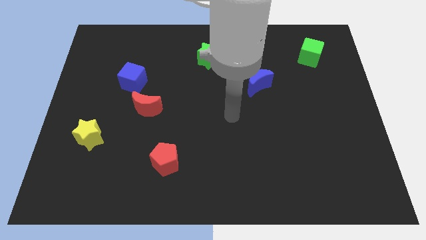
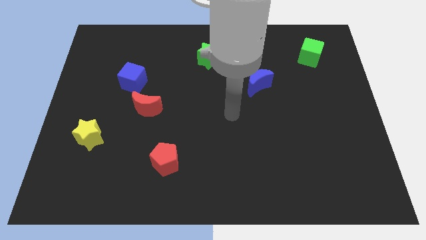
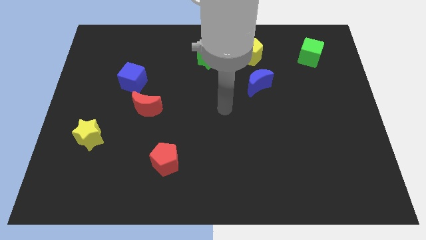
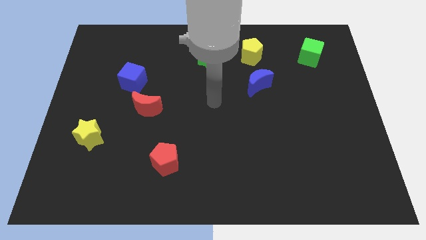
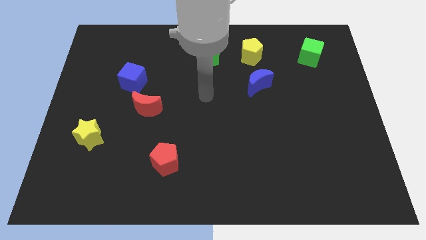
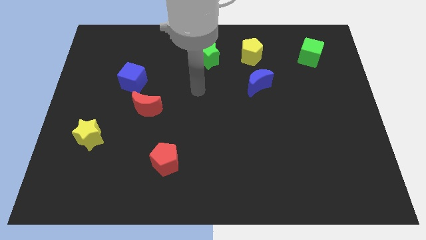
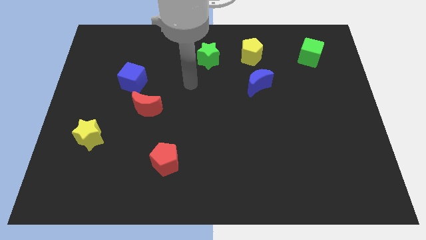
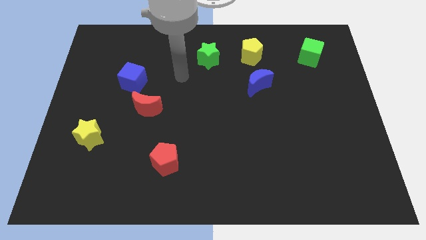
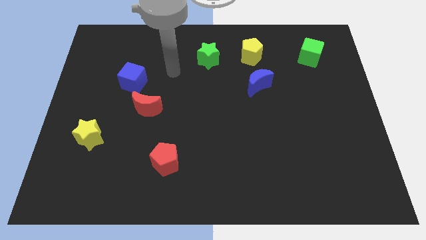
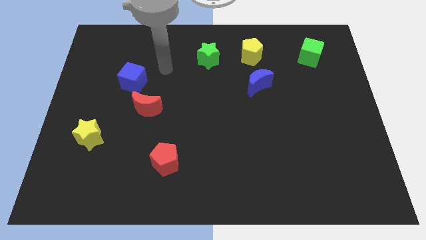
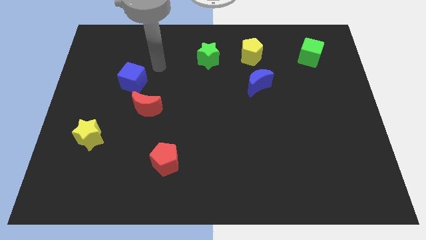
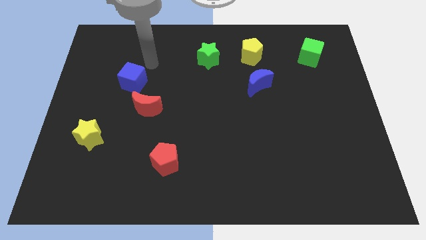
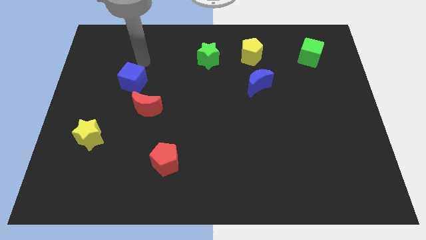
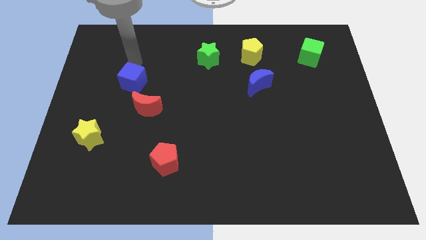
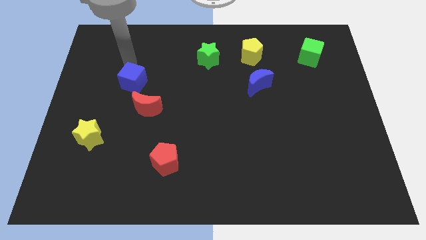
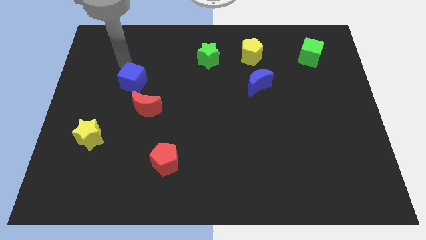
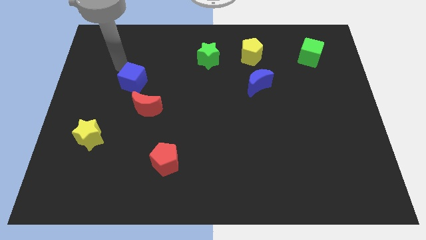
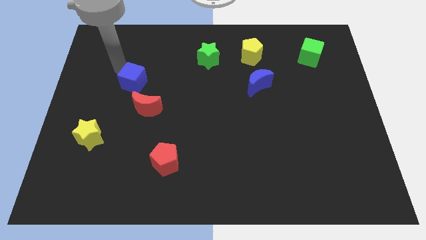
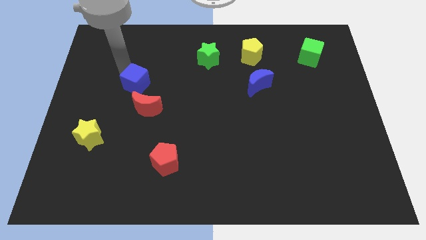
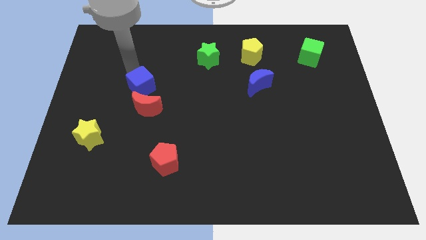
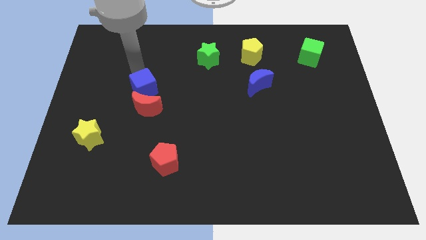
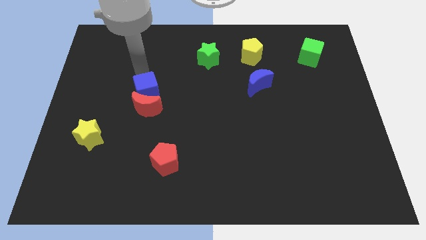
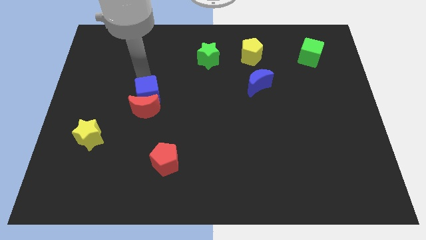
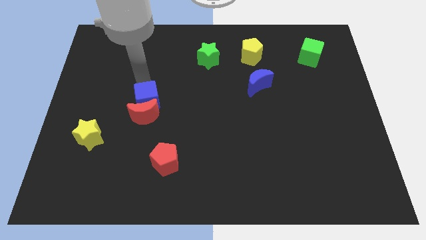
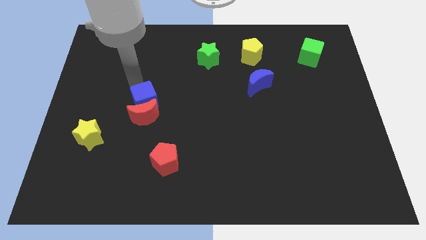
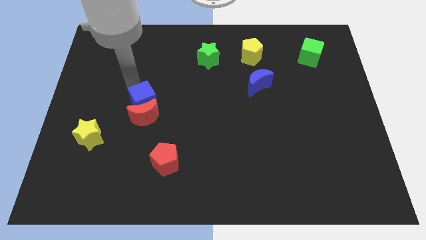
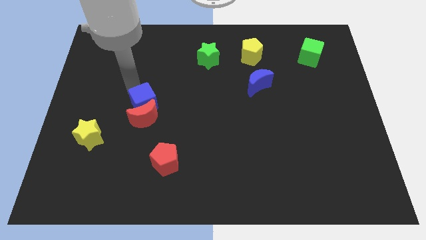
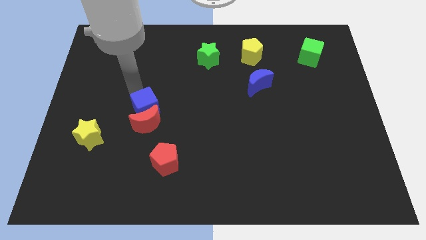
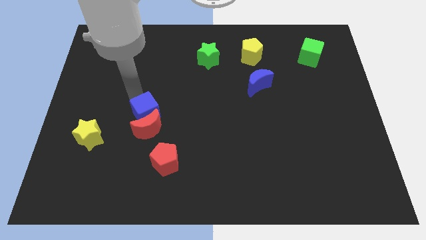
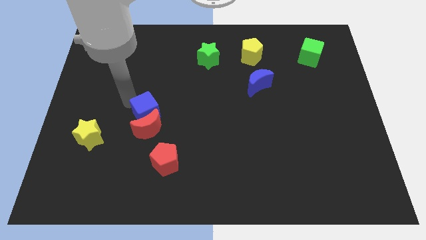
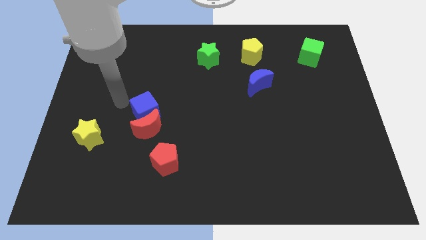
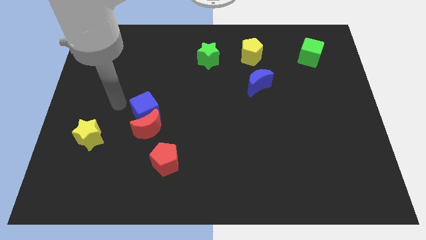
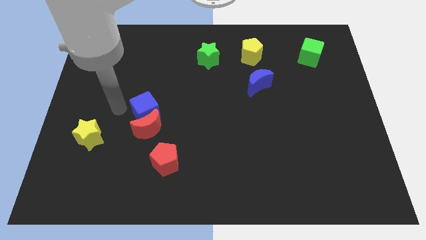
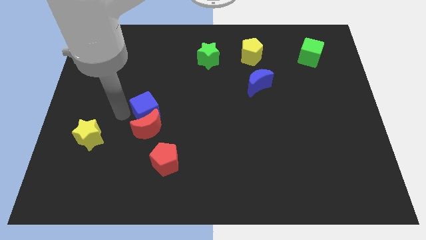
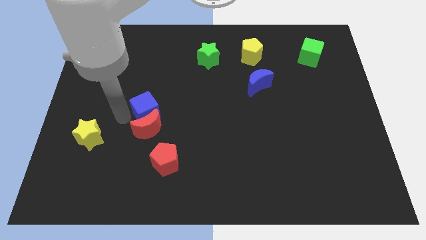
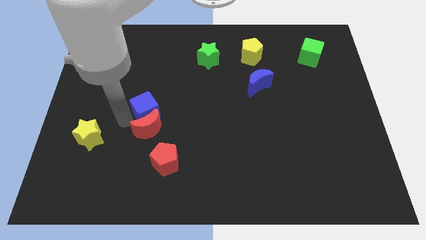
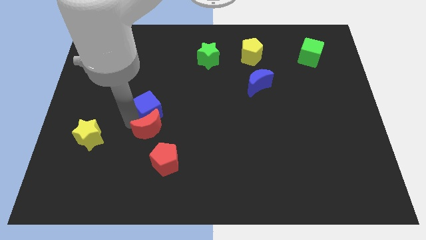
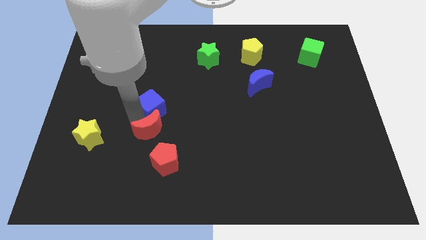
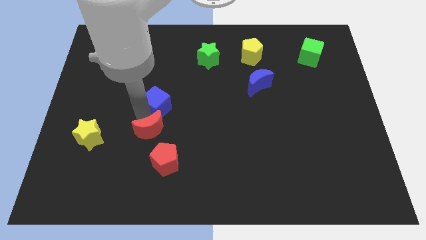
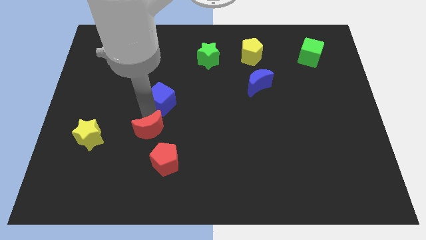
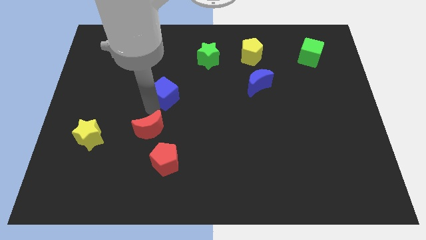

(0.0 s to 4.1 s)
slide blue cube above red moon

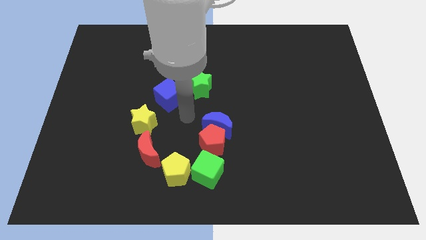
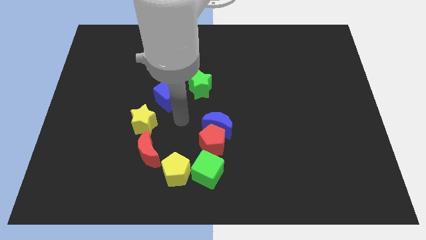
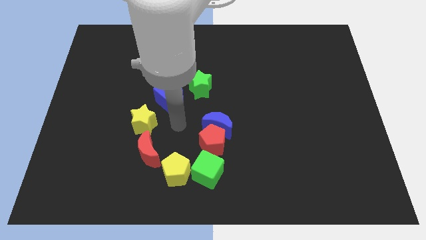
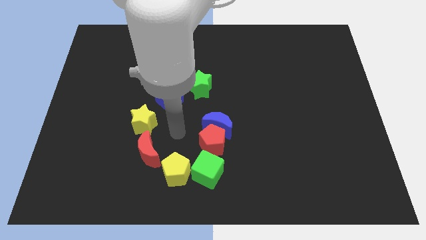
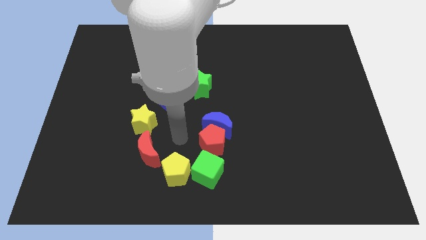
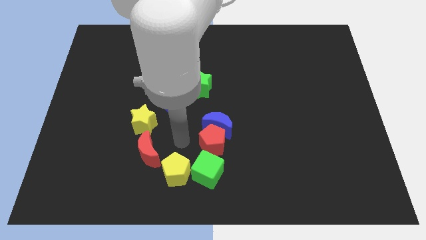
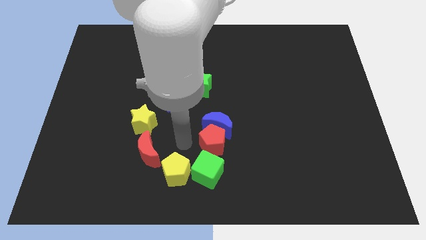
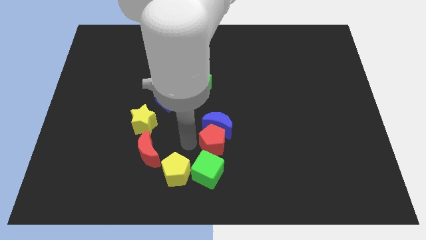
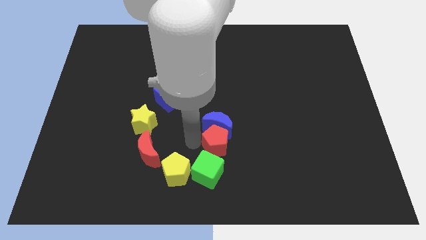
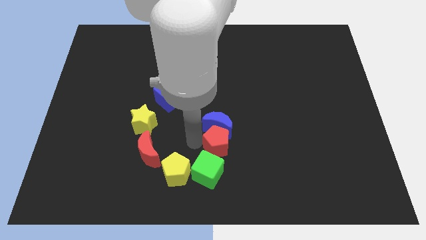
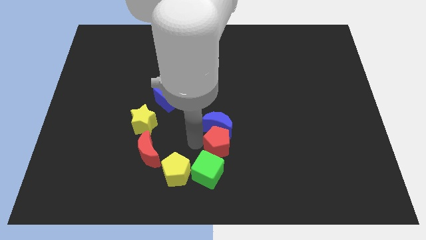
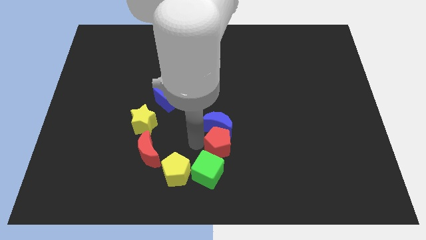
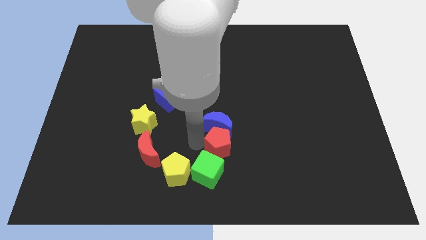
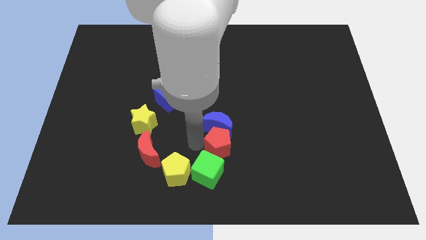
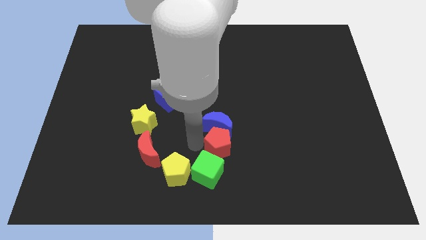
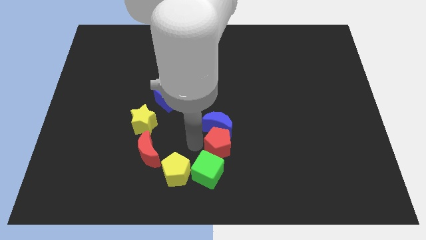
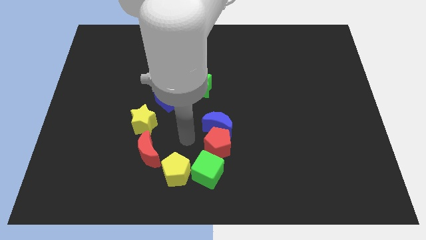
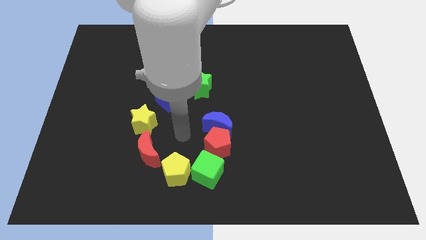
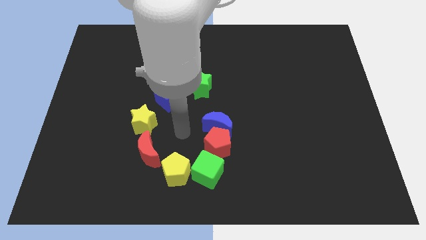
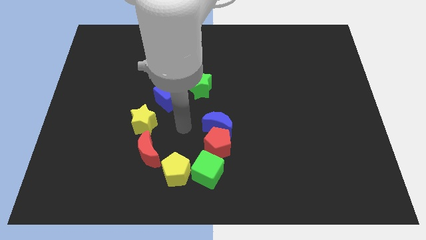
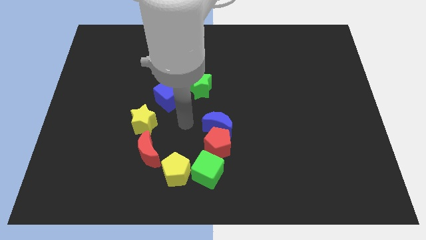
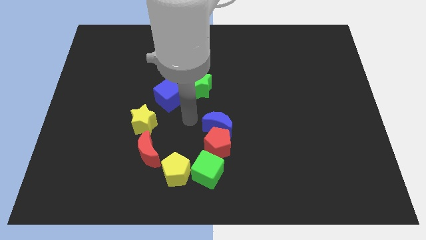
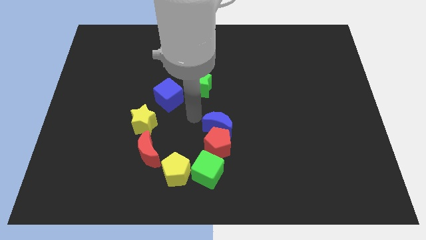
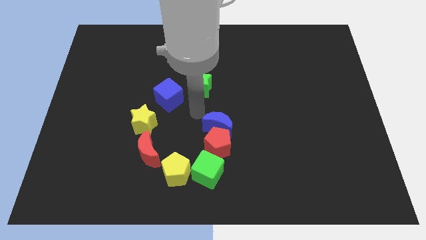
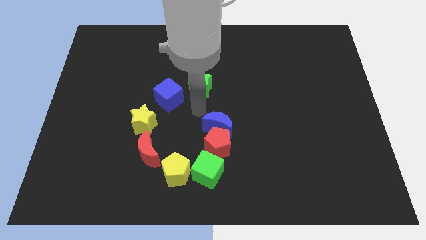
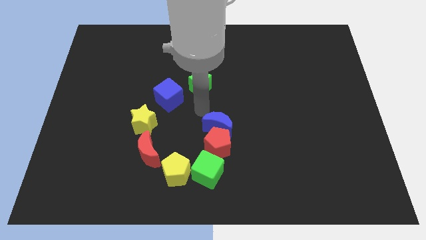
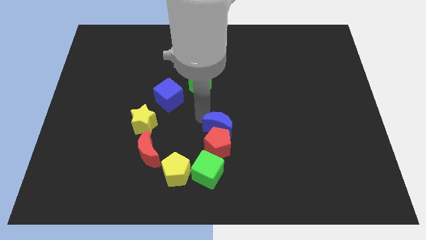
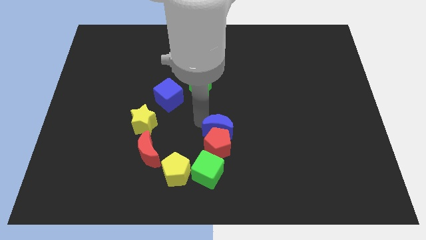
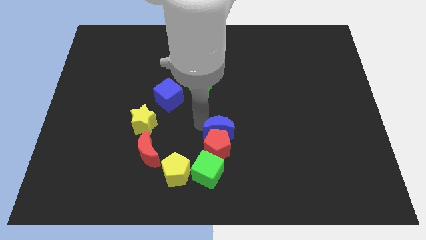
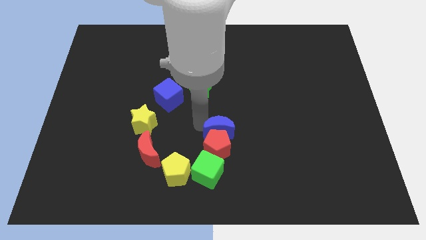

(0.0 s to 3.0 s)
slightly push the red pentagon towards the blue crescent

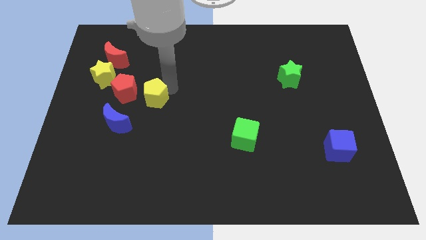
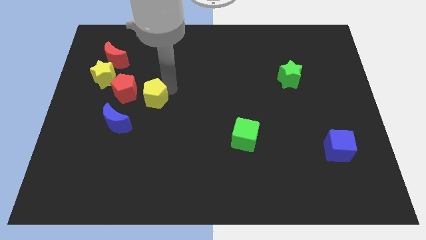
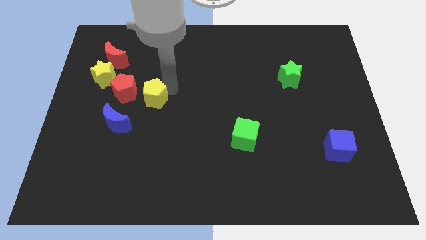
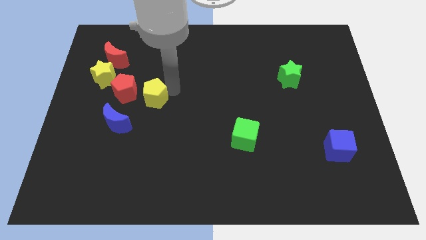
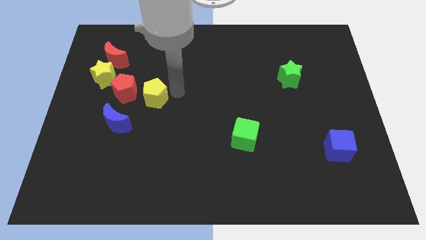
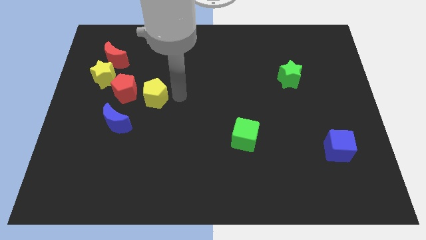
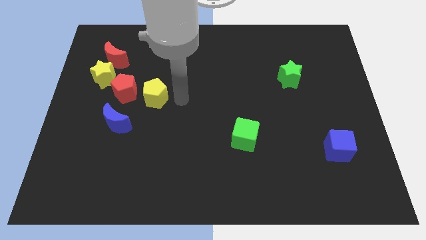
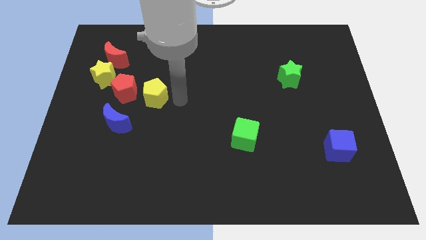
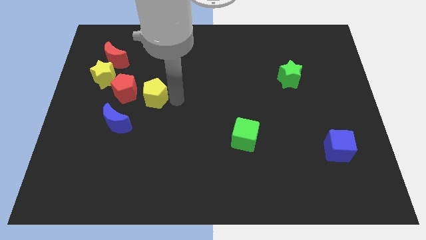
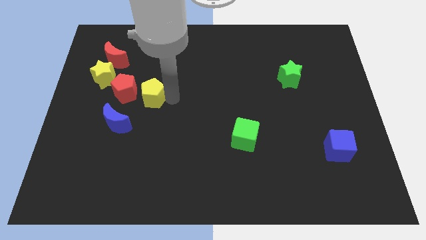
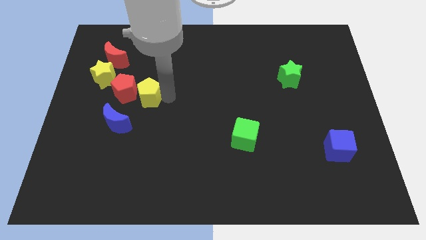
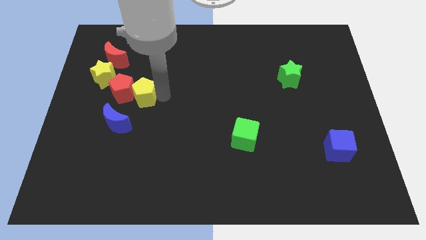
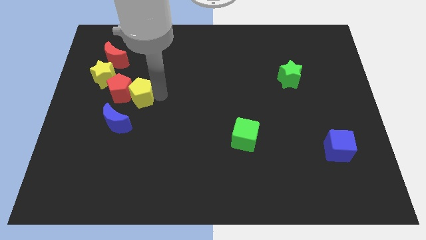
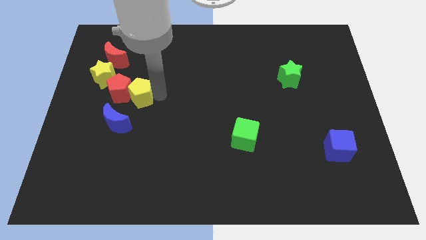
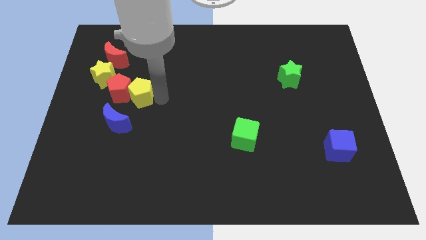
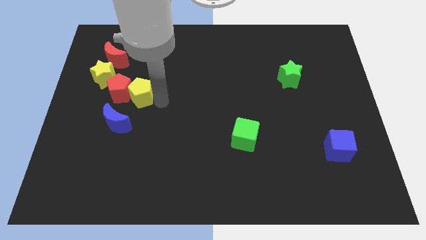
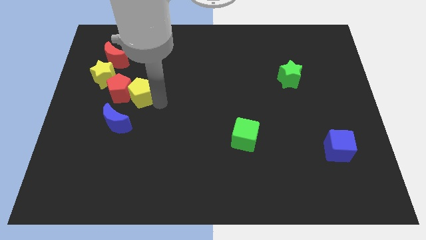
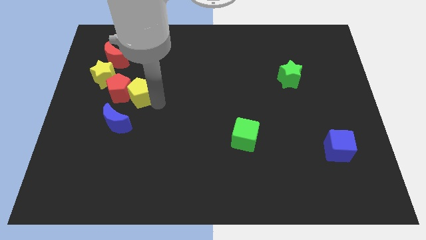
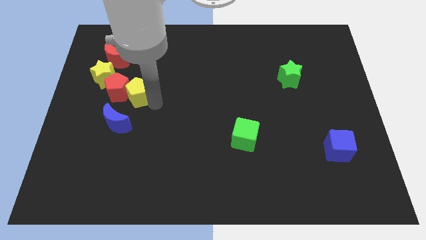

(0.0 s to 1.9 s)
push the yellow pentagon into the red pentagon
